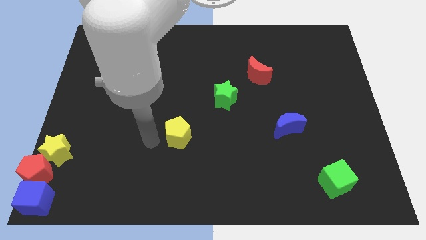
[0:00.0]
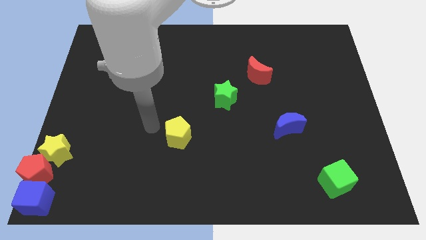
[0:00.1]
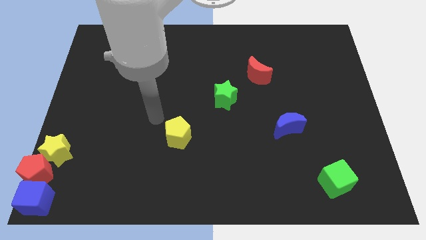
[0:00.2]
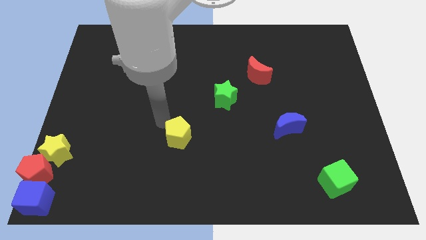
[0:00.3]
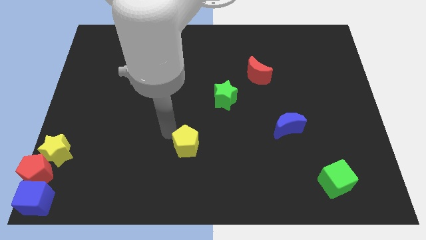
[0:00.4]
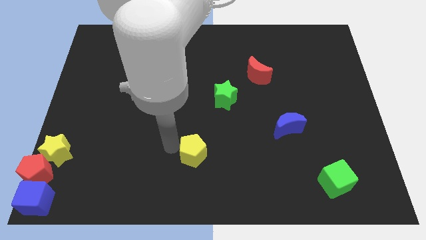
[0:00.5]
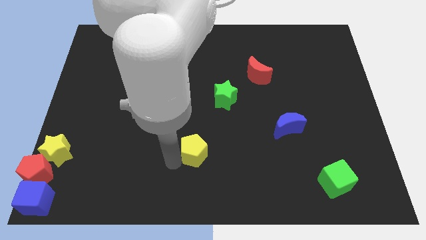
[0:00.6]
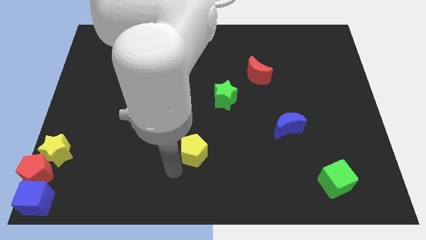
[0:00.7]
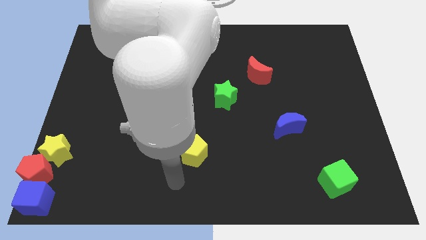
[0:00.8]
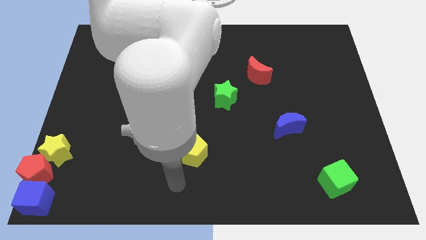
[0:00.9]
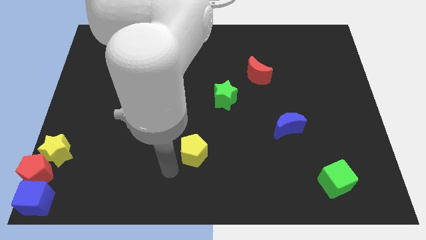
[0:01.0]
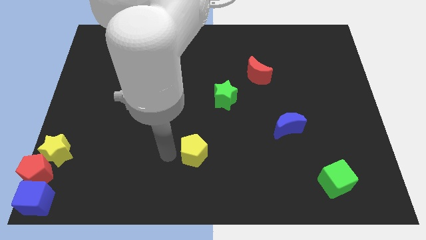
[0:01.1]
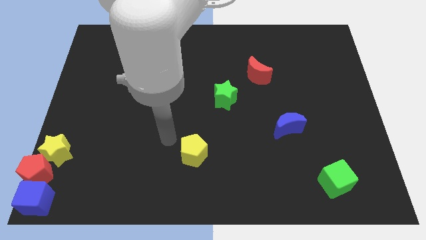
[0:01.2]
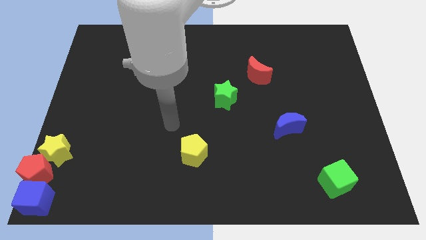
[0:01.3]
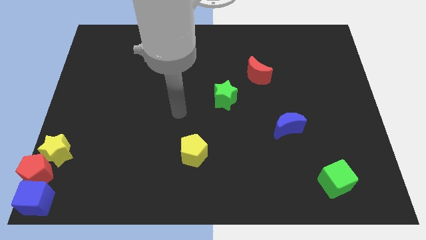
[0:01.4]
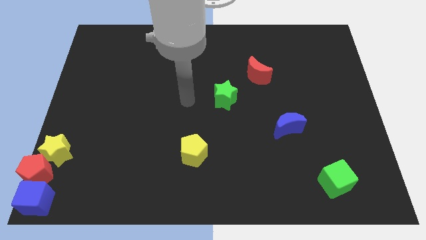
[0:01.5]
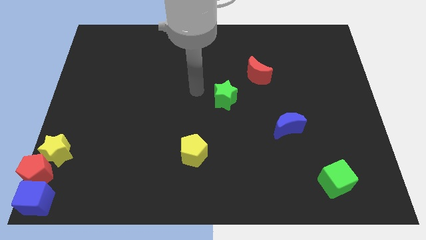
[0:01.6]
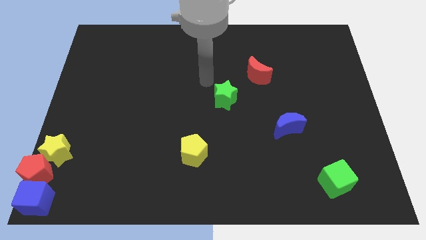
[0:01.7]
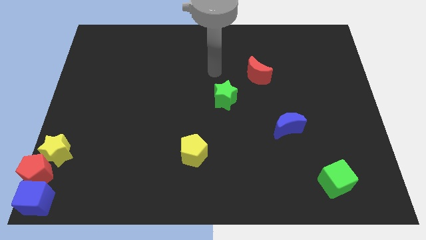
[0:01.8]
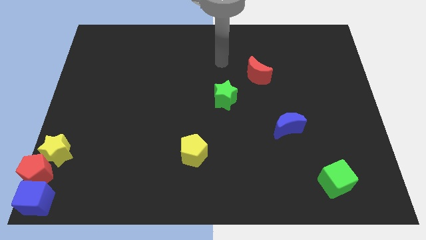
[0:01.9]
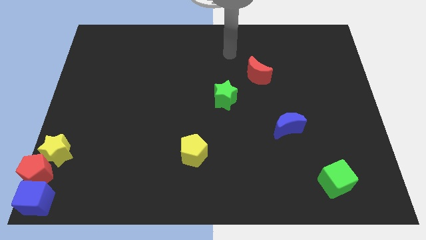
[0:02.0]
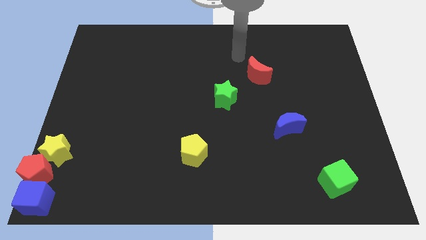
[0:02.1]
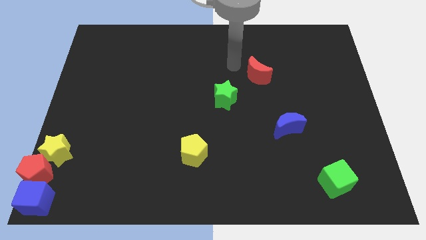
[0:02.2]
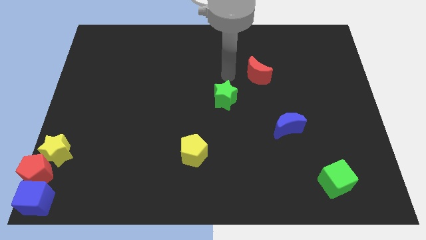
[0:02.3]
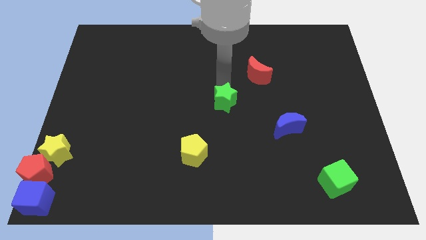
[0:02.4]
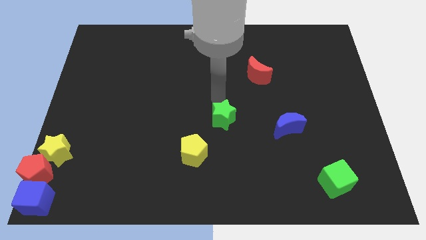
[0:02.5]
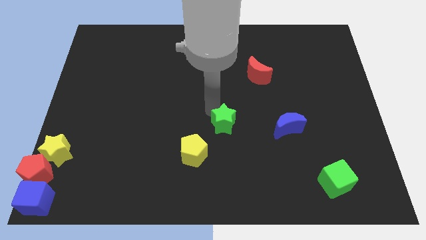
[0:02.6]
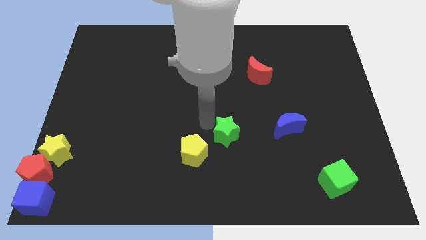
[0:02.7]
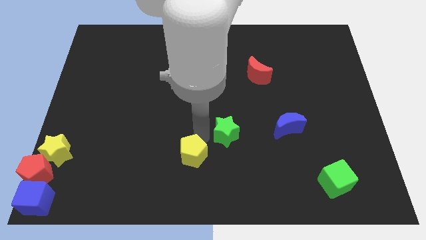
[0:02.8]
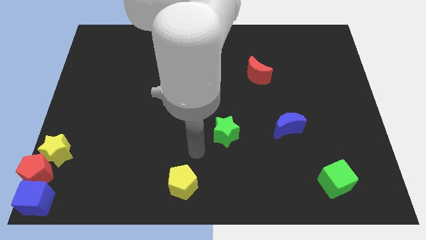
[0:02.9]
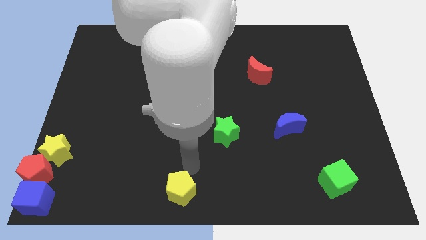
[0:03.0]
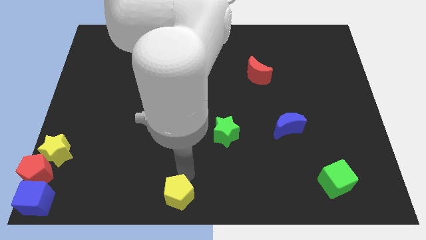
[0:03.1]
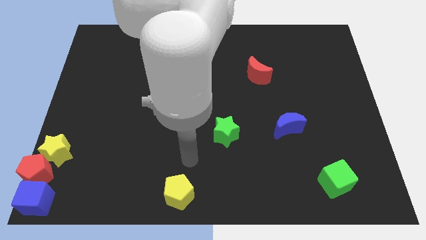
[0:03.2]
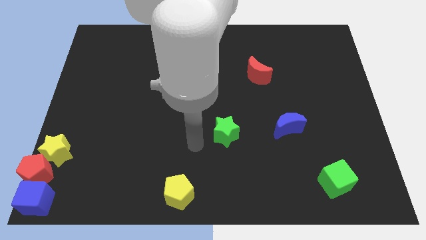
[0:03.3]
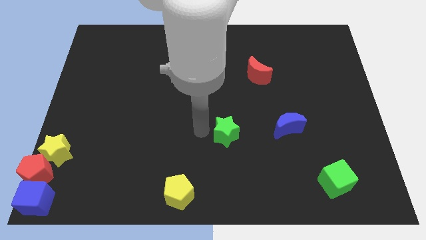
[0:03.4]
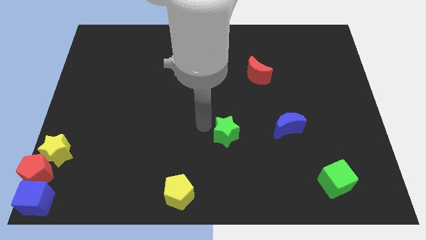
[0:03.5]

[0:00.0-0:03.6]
push the yellow pentagon down to bottom center of the board

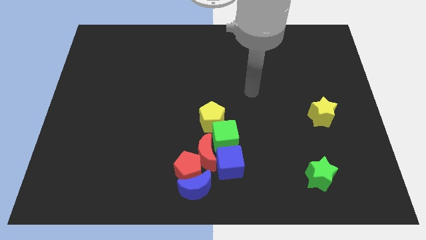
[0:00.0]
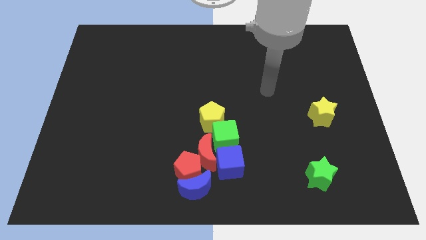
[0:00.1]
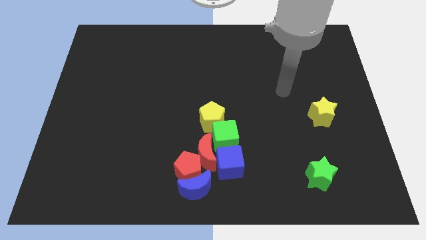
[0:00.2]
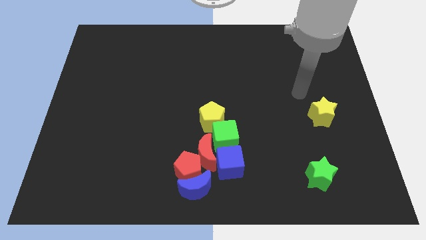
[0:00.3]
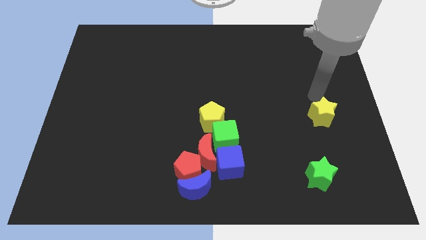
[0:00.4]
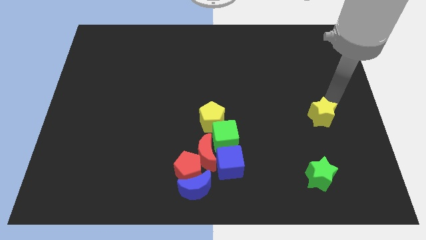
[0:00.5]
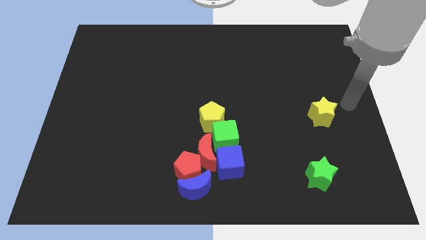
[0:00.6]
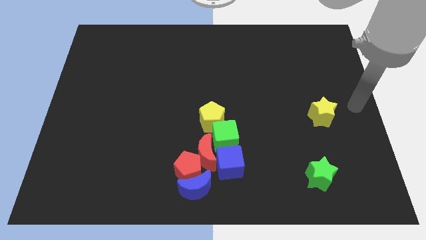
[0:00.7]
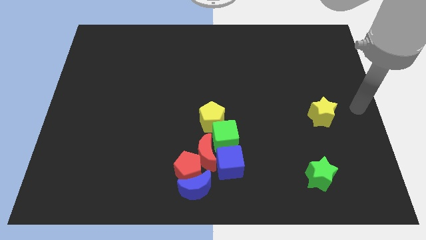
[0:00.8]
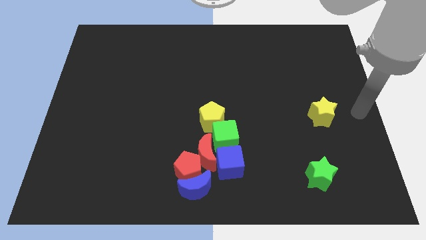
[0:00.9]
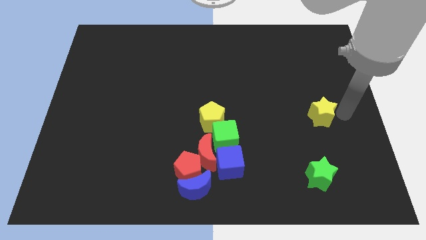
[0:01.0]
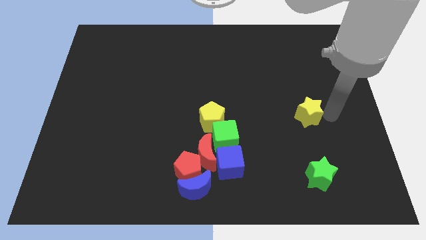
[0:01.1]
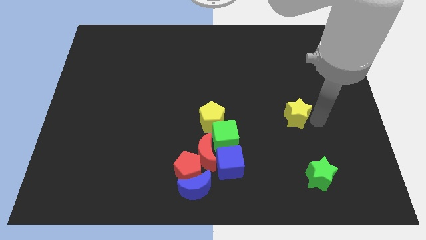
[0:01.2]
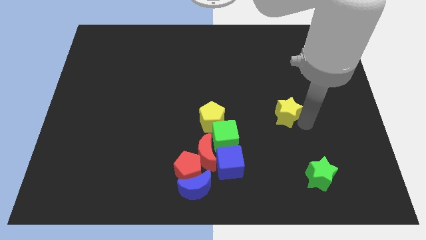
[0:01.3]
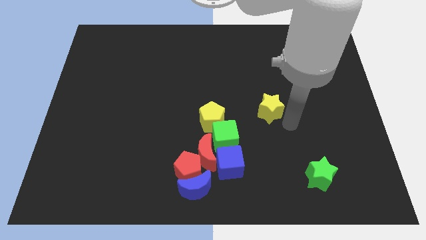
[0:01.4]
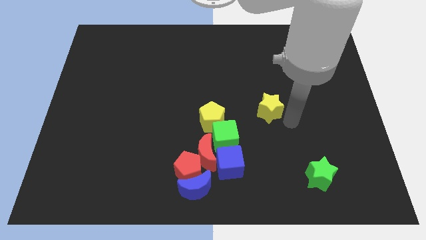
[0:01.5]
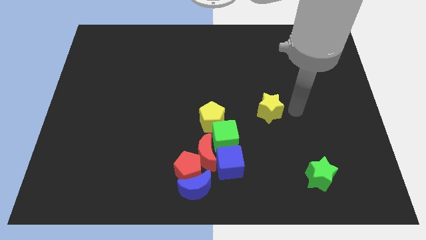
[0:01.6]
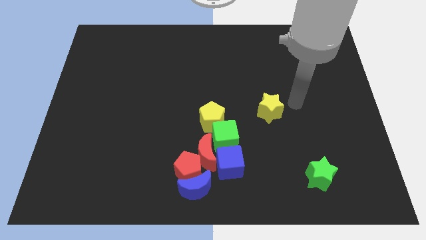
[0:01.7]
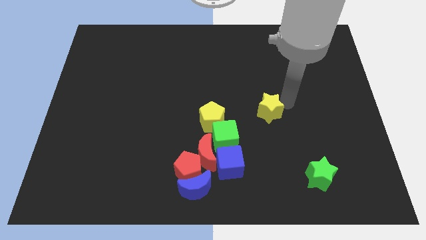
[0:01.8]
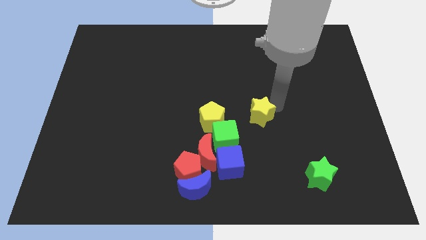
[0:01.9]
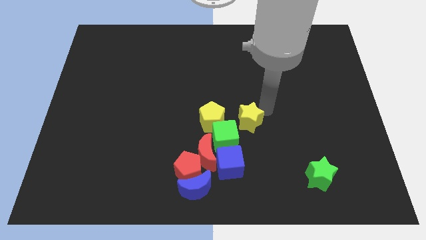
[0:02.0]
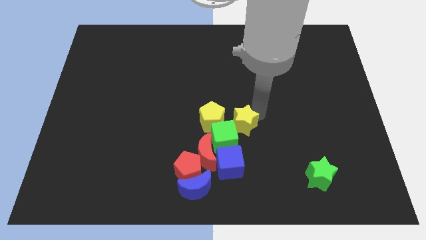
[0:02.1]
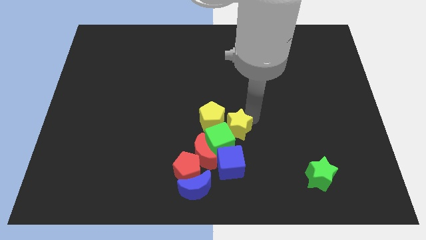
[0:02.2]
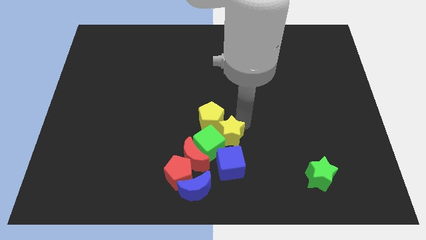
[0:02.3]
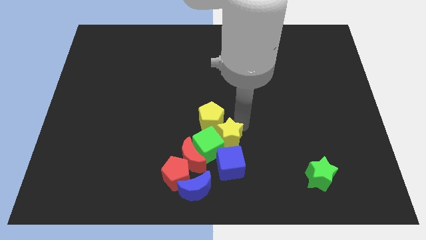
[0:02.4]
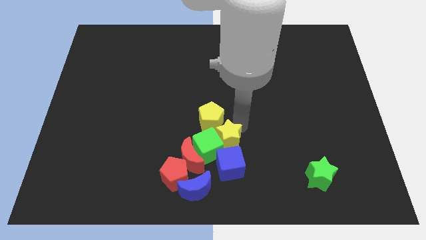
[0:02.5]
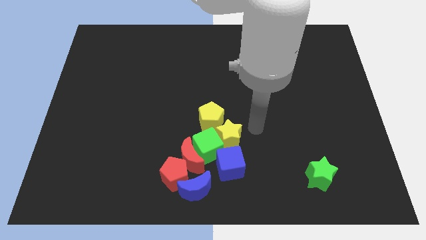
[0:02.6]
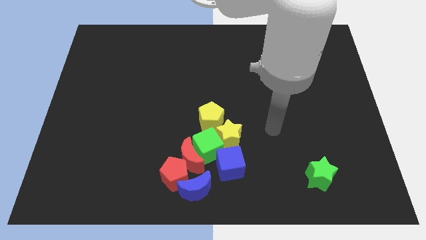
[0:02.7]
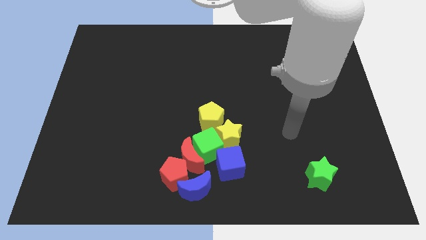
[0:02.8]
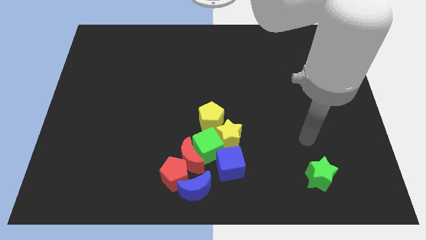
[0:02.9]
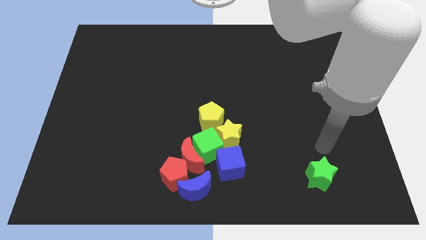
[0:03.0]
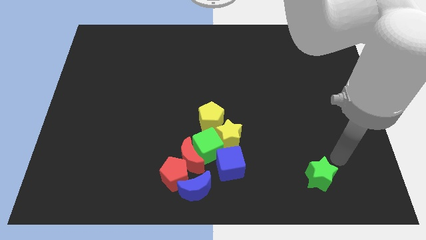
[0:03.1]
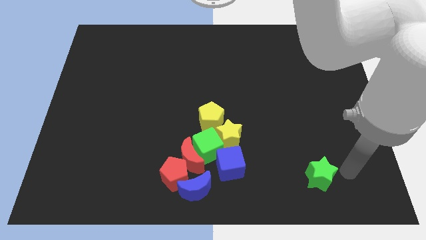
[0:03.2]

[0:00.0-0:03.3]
move yellow star into the green cube

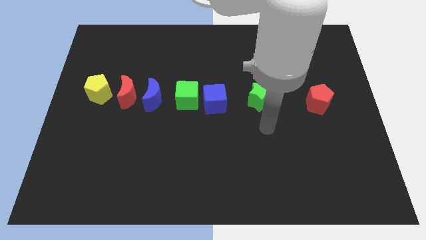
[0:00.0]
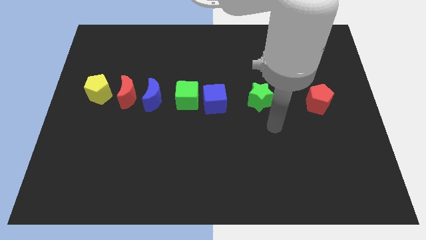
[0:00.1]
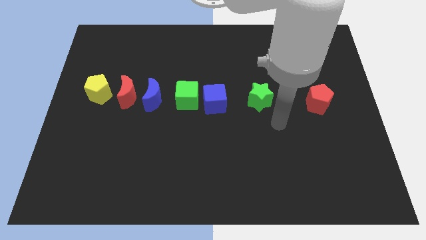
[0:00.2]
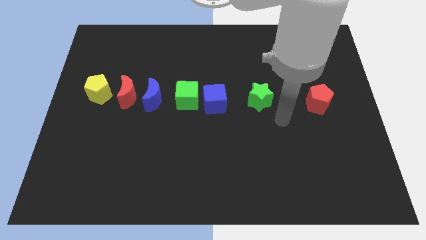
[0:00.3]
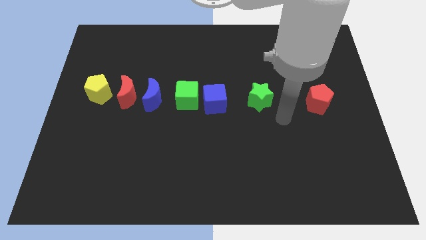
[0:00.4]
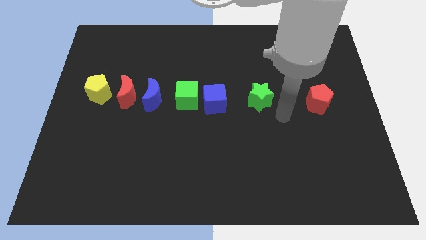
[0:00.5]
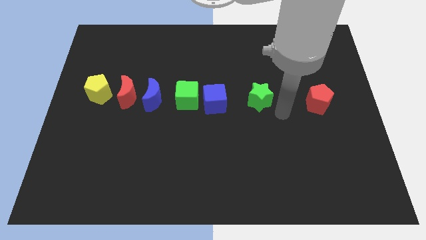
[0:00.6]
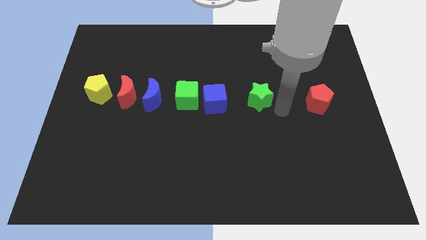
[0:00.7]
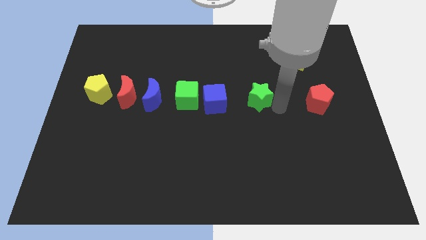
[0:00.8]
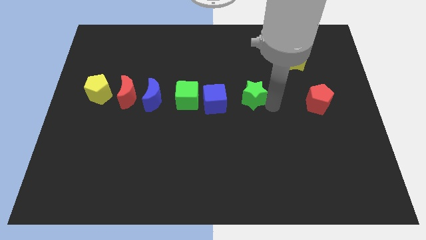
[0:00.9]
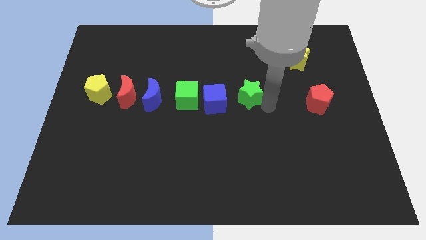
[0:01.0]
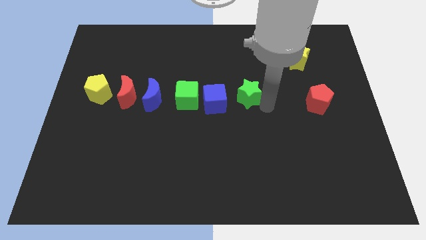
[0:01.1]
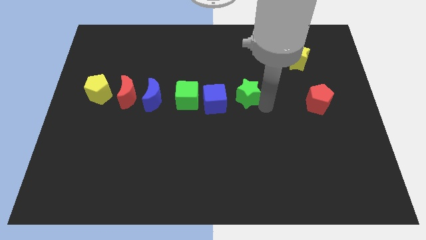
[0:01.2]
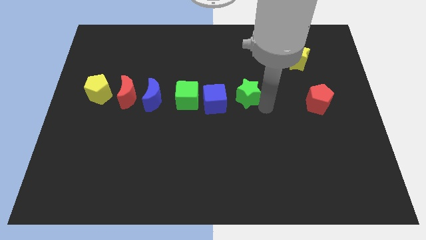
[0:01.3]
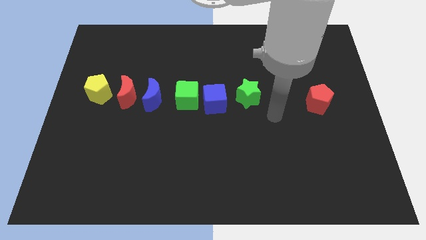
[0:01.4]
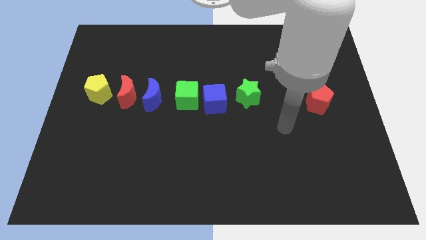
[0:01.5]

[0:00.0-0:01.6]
push green star a bit close to the blue cube

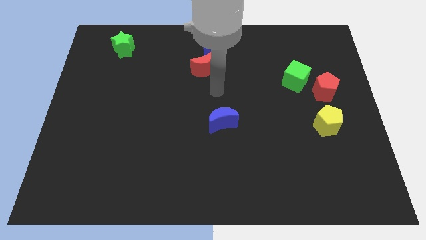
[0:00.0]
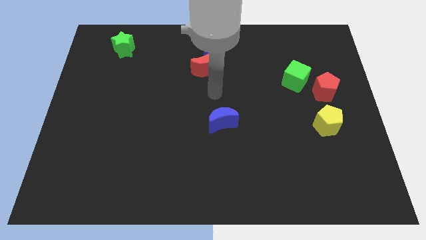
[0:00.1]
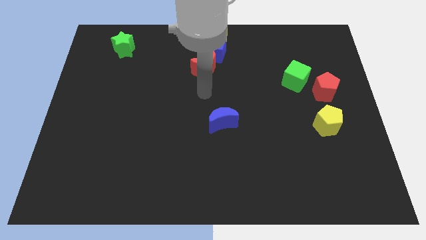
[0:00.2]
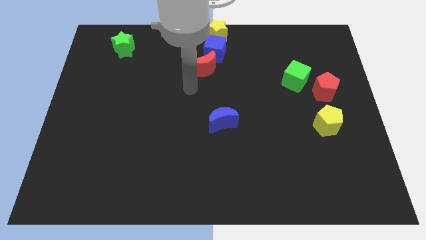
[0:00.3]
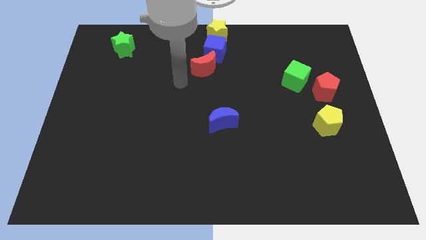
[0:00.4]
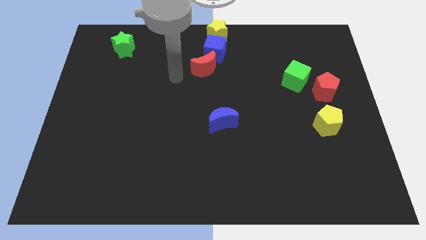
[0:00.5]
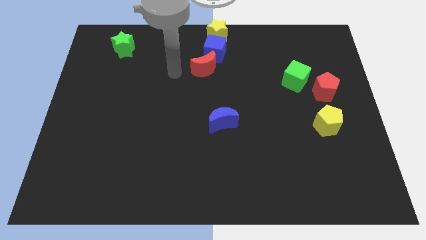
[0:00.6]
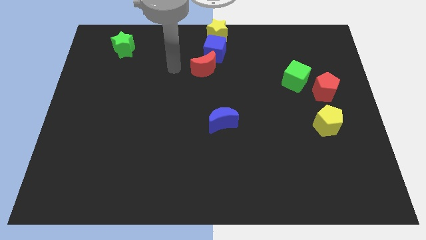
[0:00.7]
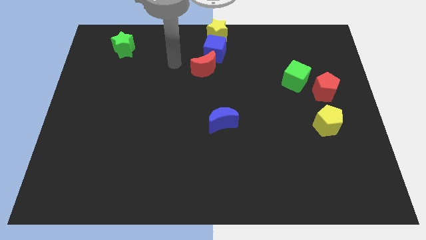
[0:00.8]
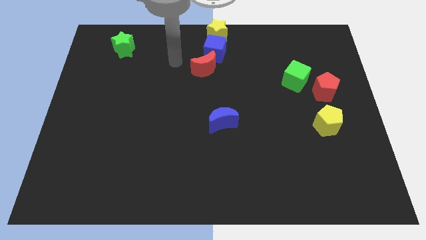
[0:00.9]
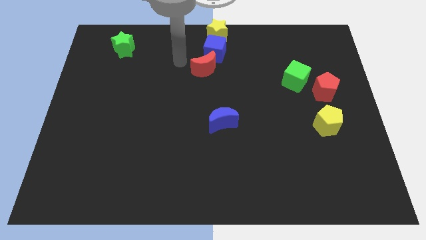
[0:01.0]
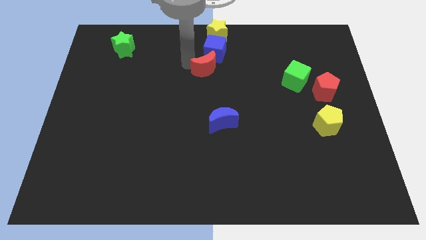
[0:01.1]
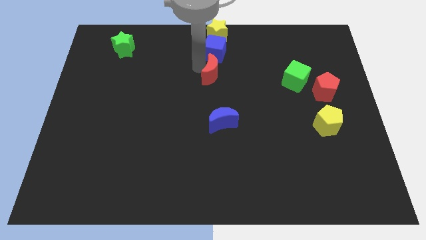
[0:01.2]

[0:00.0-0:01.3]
move the arm to the left side of the red crescent
